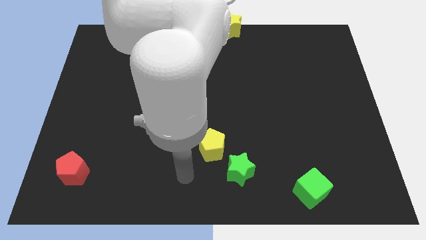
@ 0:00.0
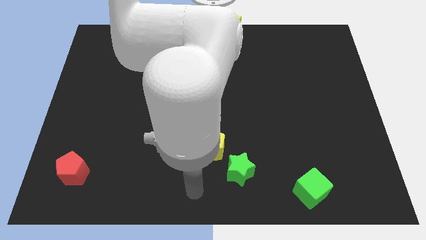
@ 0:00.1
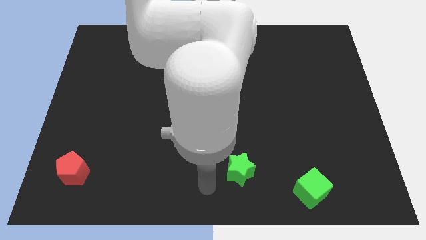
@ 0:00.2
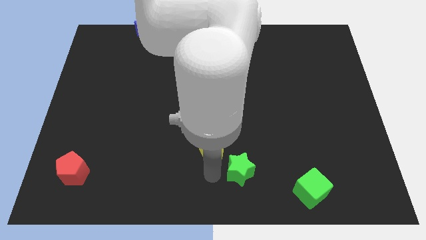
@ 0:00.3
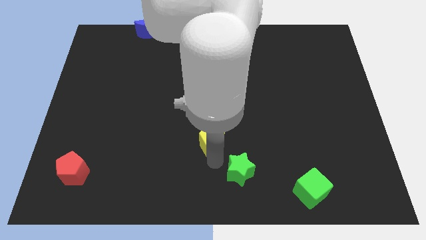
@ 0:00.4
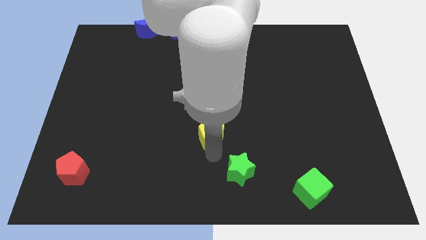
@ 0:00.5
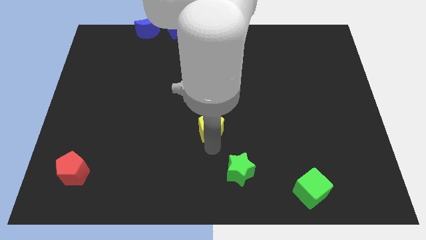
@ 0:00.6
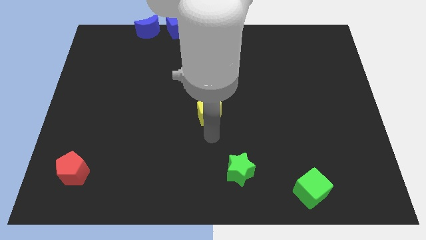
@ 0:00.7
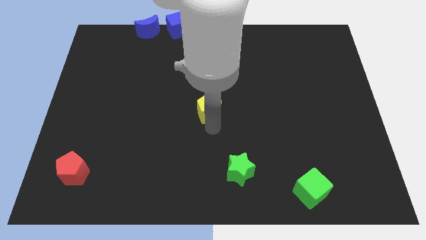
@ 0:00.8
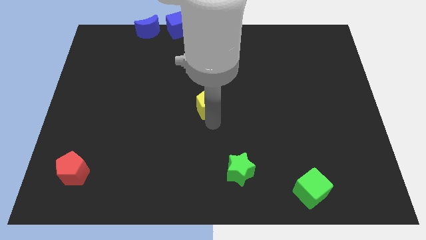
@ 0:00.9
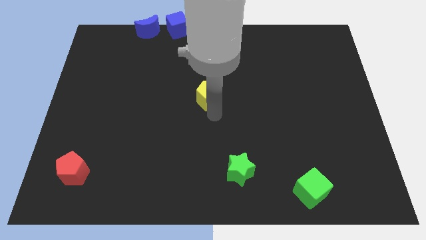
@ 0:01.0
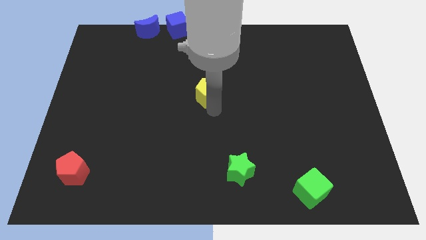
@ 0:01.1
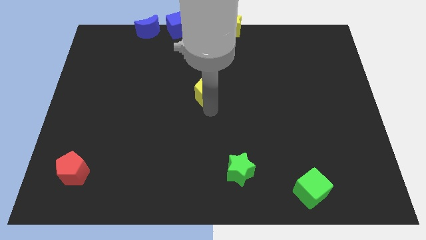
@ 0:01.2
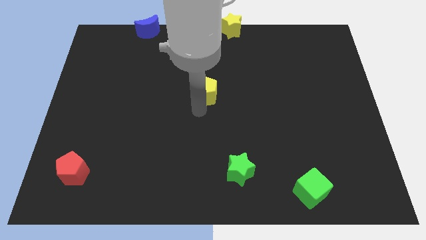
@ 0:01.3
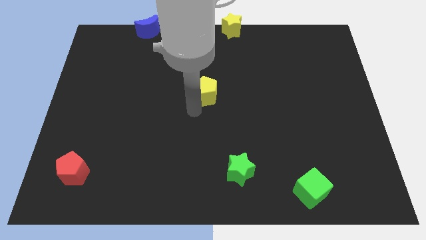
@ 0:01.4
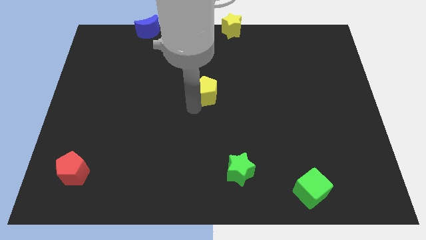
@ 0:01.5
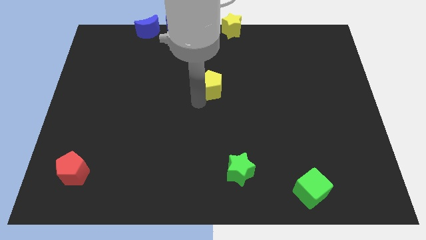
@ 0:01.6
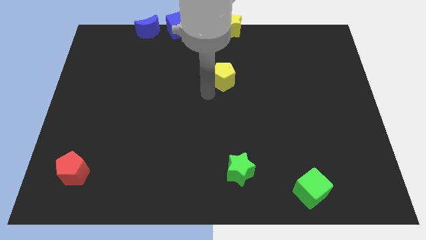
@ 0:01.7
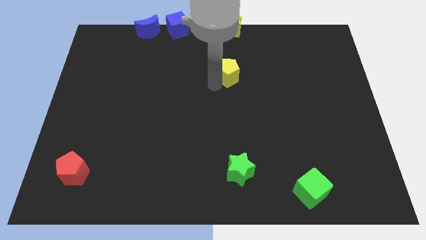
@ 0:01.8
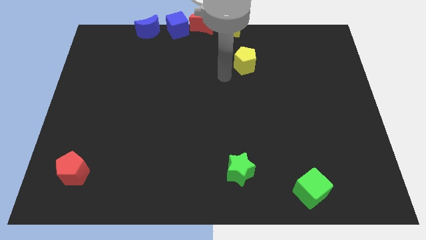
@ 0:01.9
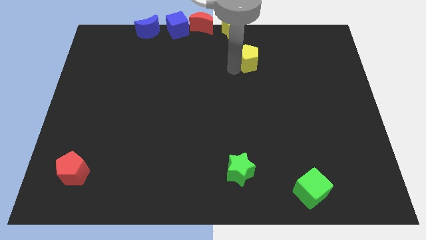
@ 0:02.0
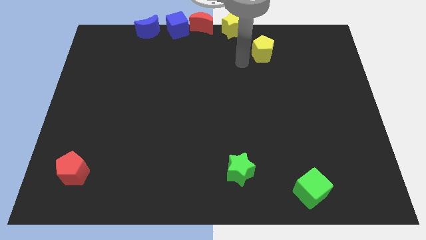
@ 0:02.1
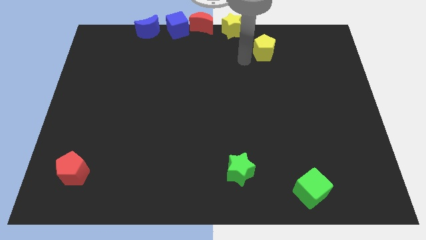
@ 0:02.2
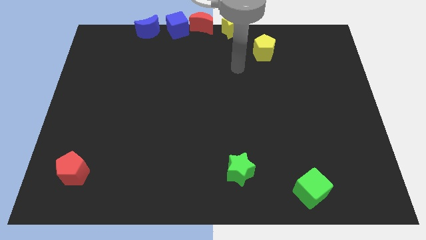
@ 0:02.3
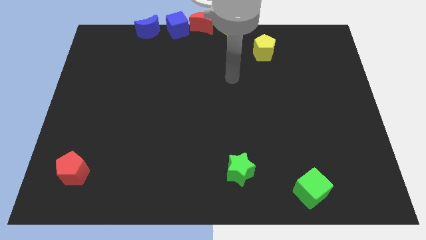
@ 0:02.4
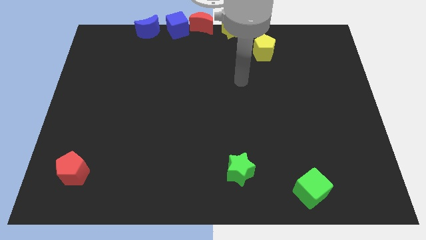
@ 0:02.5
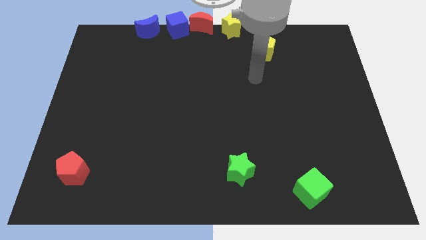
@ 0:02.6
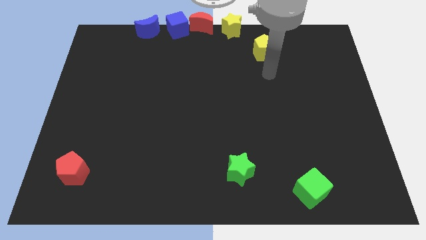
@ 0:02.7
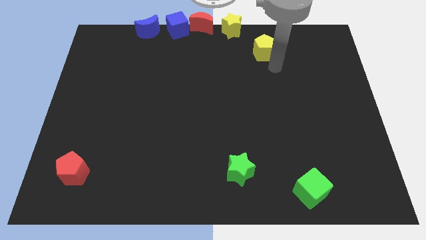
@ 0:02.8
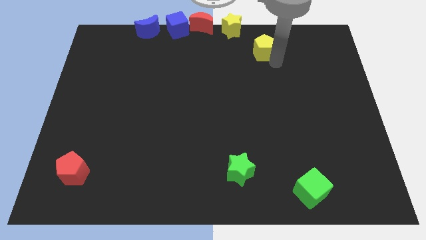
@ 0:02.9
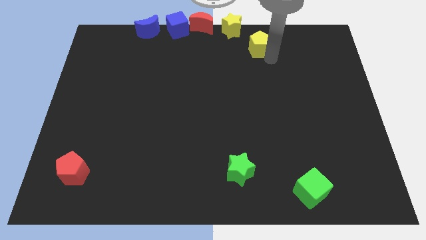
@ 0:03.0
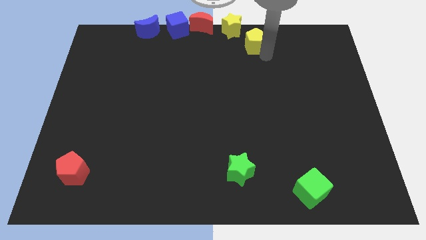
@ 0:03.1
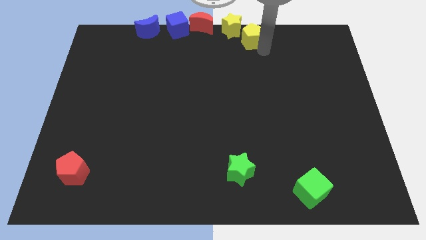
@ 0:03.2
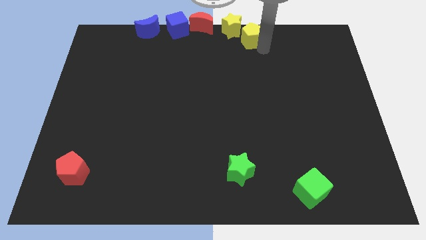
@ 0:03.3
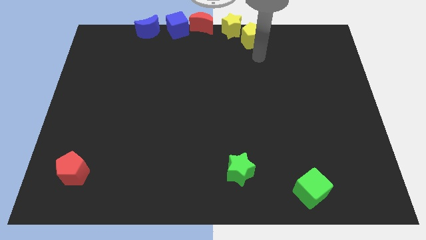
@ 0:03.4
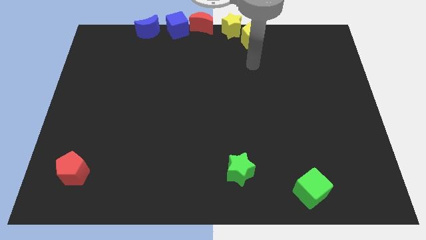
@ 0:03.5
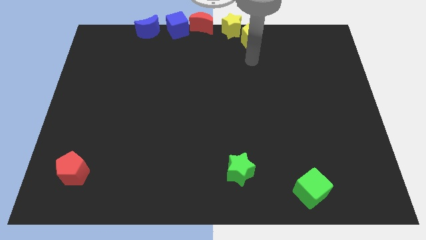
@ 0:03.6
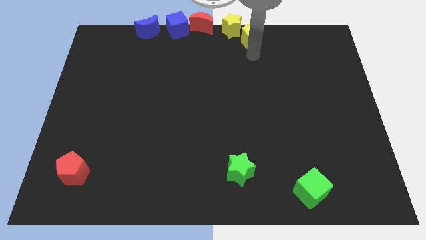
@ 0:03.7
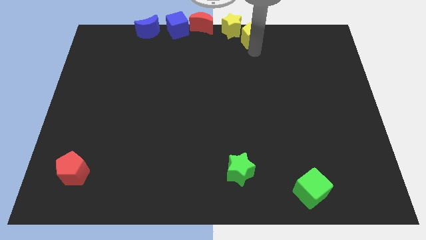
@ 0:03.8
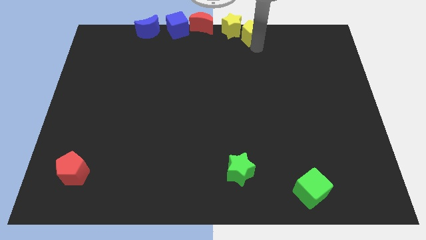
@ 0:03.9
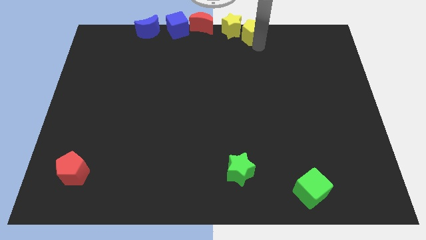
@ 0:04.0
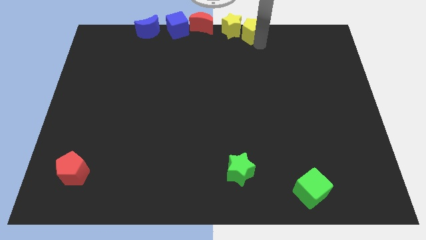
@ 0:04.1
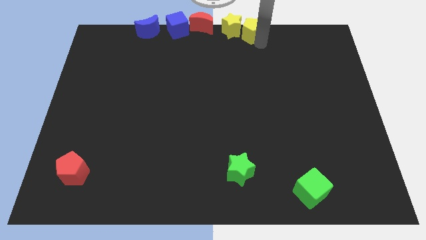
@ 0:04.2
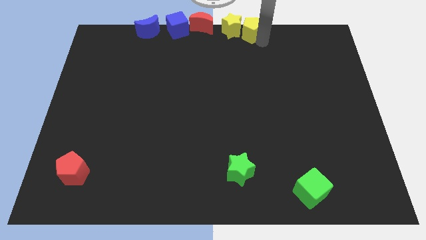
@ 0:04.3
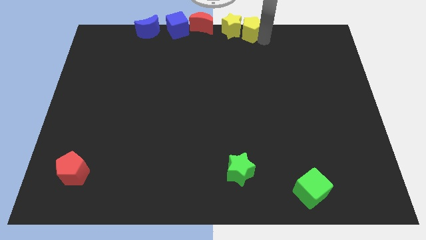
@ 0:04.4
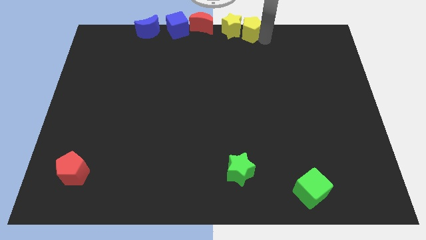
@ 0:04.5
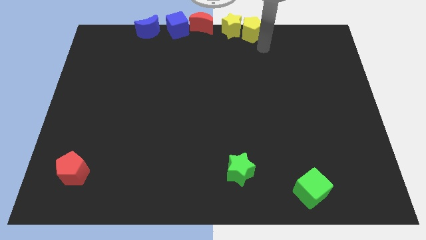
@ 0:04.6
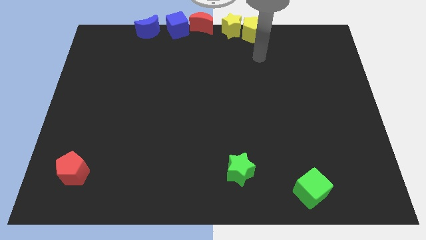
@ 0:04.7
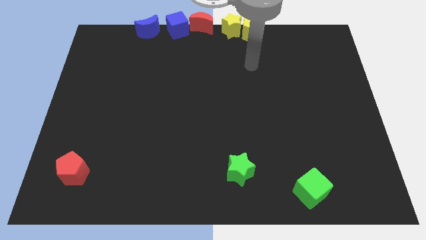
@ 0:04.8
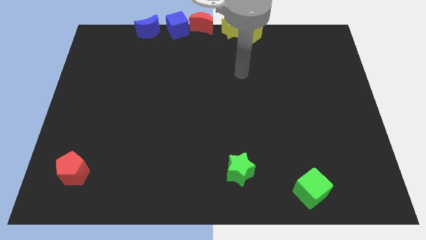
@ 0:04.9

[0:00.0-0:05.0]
move the yellow pentagon to the right of the yellow star

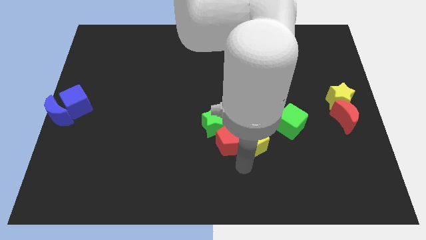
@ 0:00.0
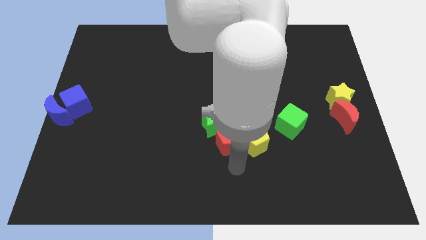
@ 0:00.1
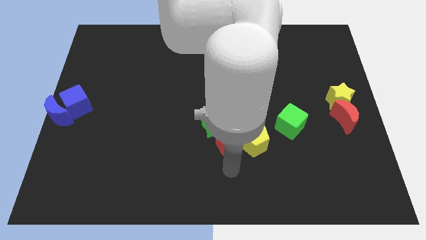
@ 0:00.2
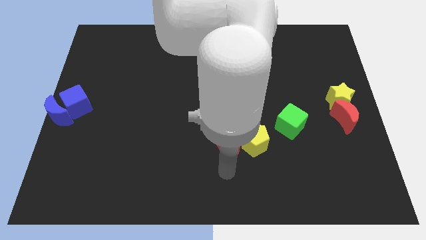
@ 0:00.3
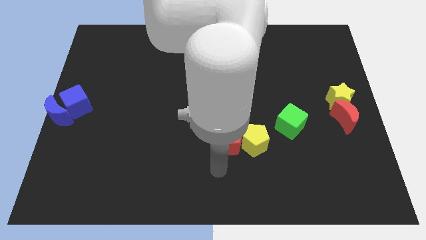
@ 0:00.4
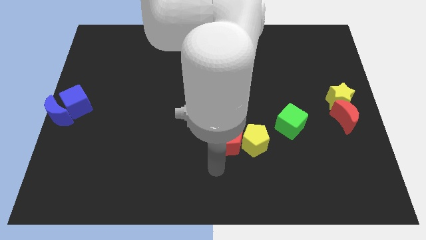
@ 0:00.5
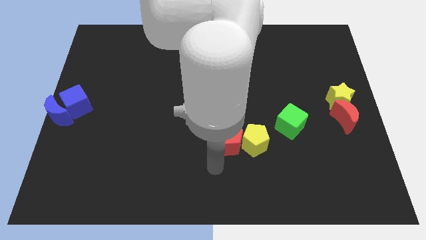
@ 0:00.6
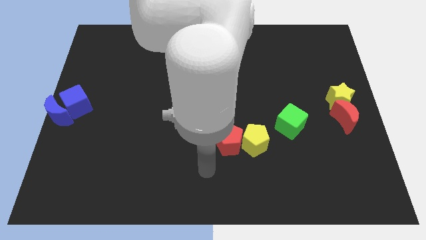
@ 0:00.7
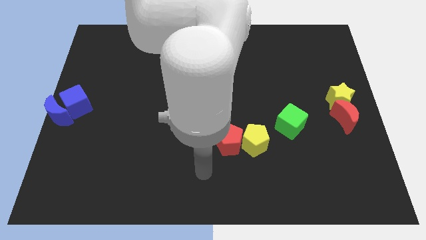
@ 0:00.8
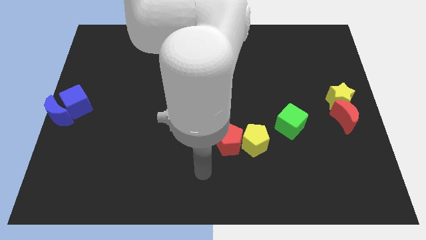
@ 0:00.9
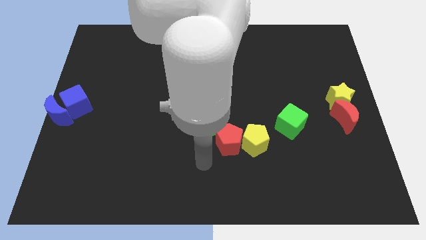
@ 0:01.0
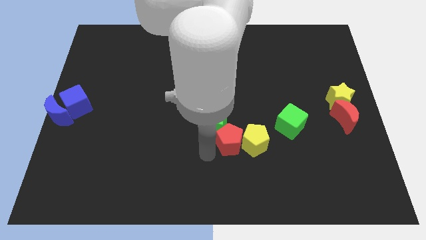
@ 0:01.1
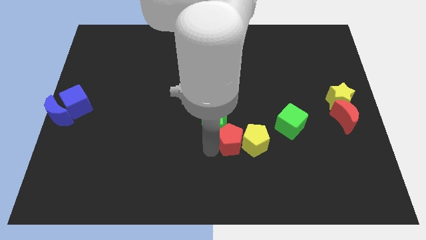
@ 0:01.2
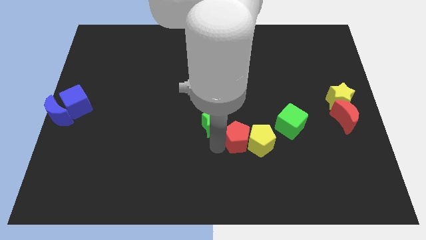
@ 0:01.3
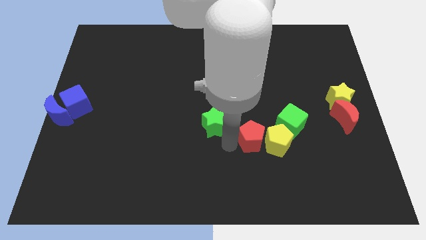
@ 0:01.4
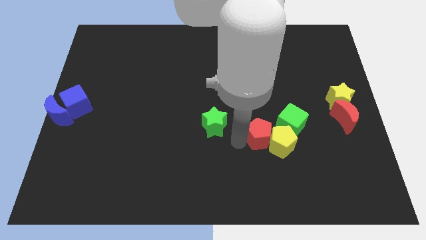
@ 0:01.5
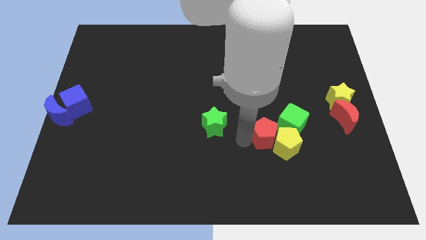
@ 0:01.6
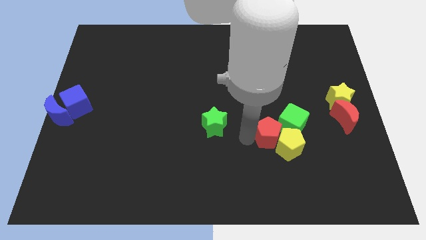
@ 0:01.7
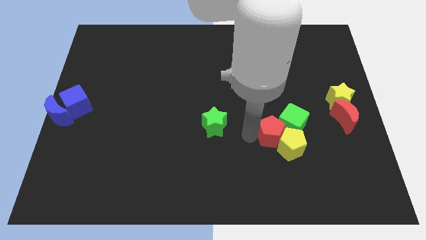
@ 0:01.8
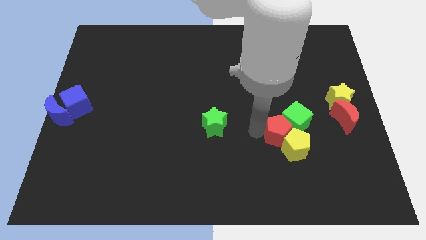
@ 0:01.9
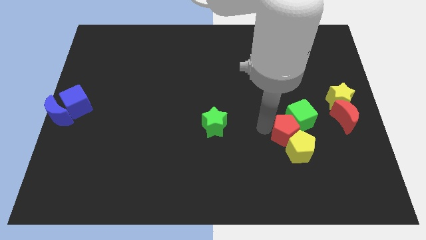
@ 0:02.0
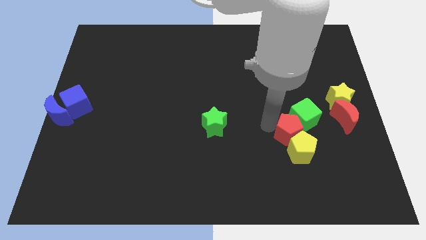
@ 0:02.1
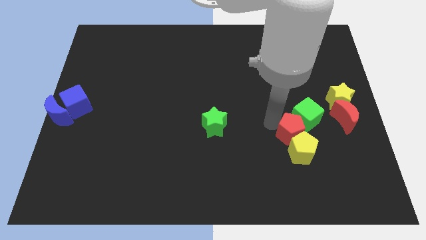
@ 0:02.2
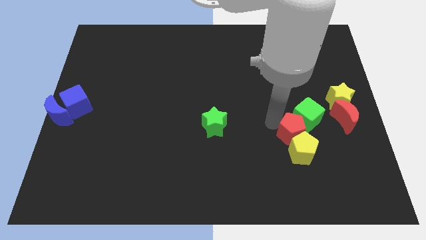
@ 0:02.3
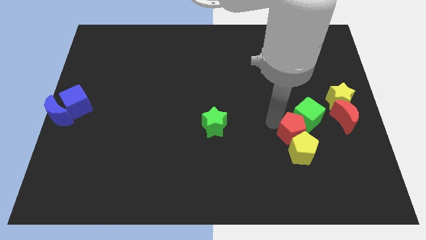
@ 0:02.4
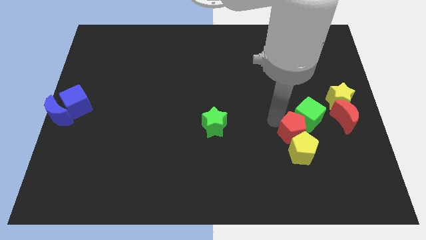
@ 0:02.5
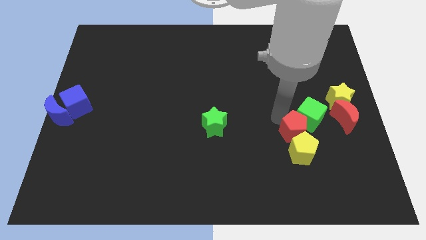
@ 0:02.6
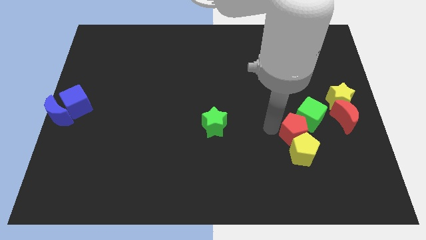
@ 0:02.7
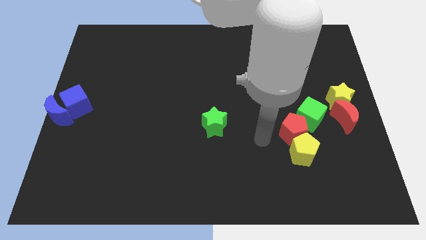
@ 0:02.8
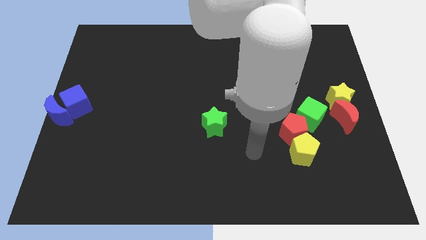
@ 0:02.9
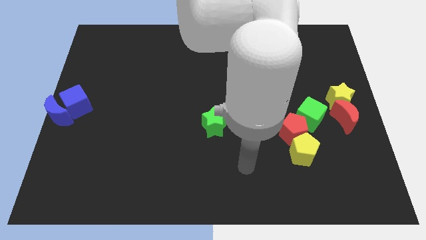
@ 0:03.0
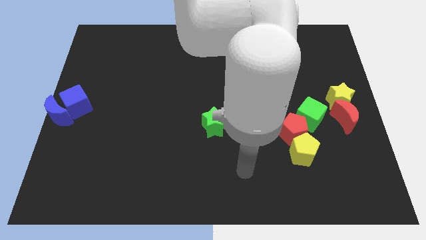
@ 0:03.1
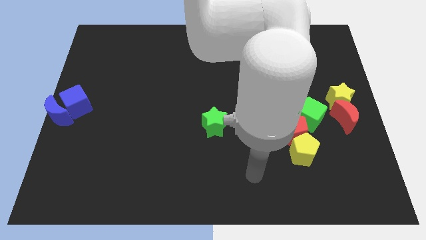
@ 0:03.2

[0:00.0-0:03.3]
push red pentagon in to green cube

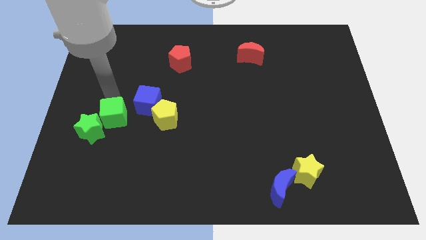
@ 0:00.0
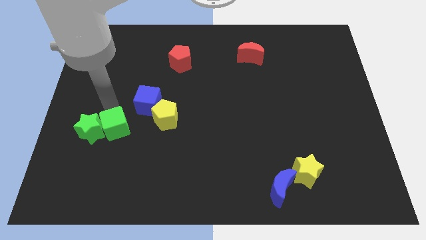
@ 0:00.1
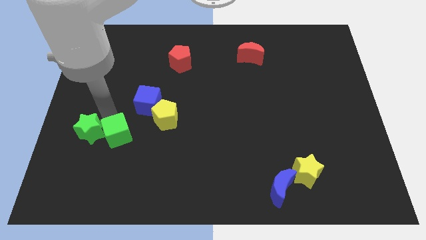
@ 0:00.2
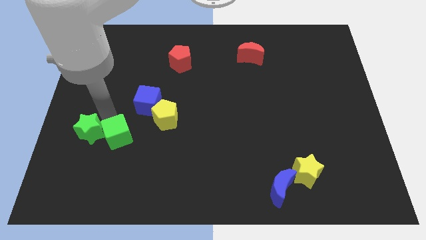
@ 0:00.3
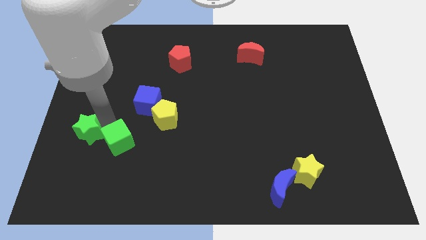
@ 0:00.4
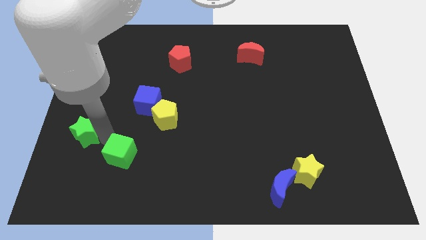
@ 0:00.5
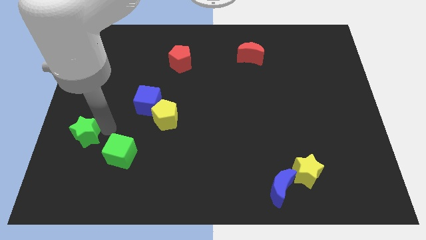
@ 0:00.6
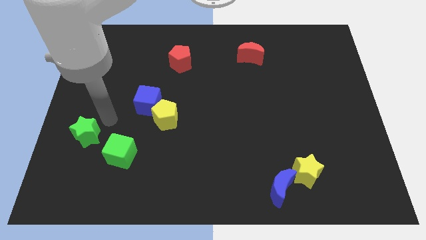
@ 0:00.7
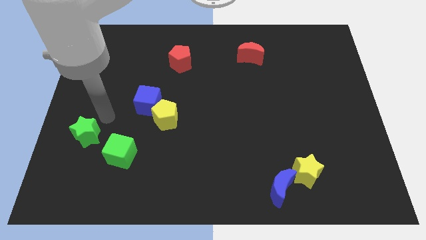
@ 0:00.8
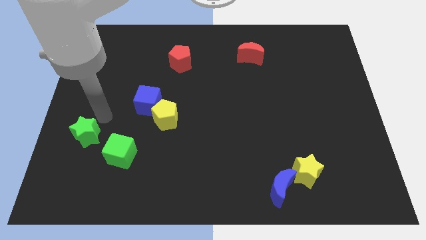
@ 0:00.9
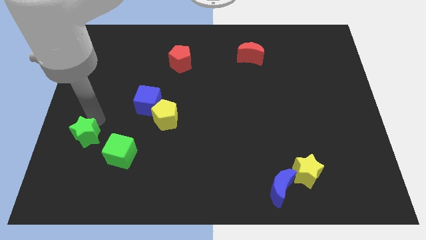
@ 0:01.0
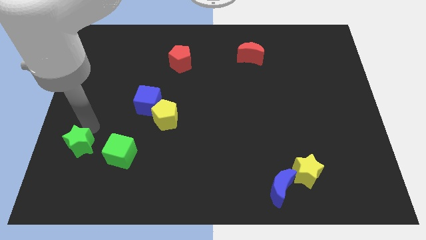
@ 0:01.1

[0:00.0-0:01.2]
push the green star slightly to the bottom
